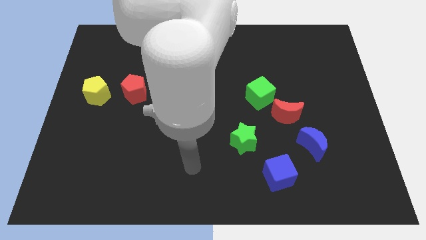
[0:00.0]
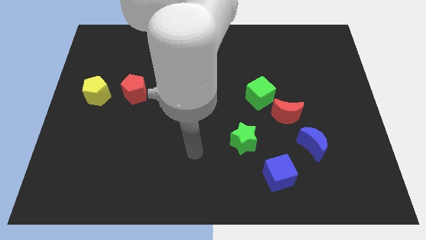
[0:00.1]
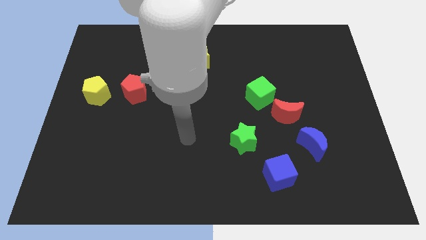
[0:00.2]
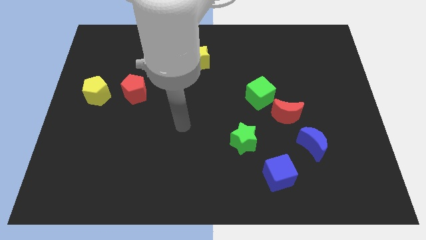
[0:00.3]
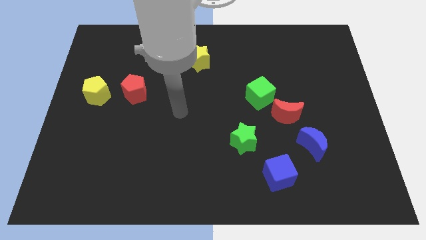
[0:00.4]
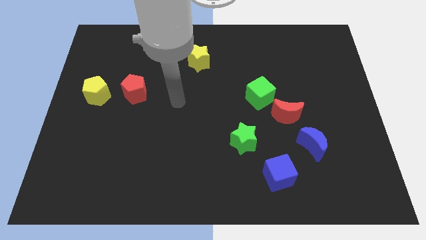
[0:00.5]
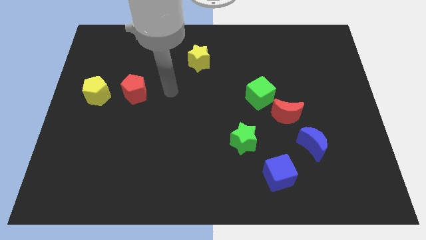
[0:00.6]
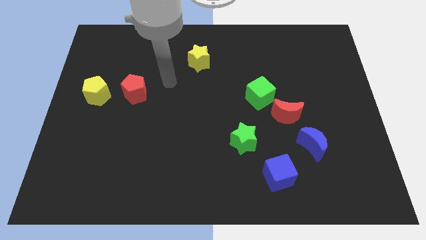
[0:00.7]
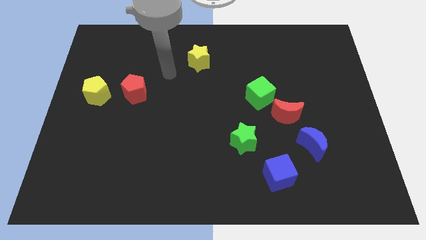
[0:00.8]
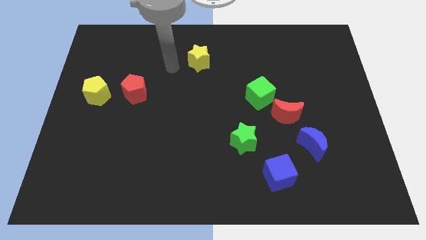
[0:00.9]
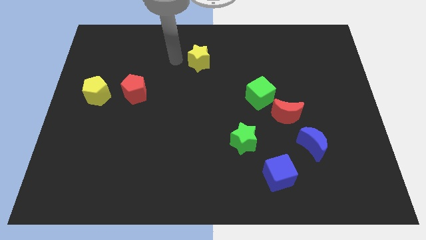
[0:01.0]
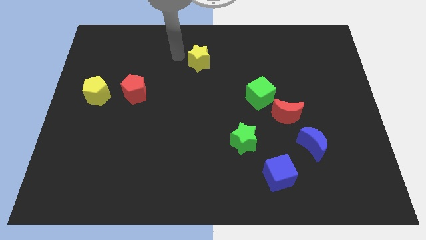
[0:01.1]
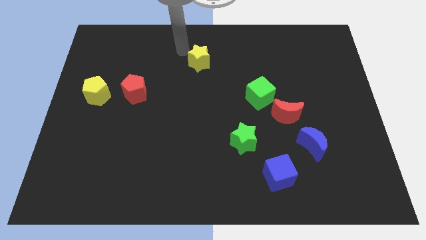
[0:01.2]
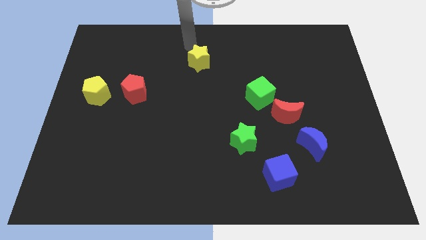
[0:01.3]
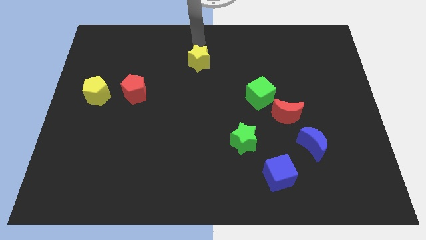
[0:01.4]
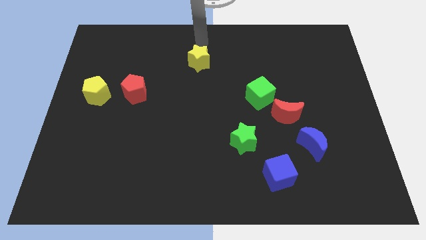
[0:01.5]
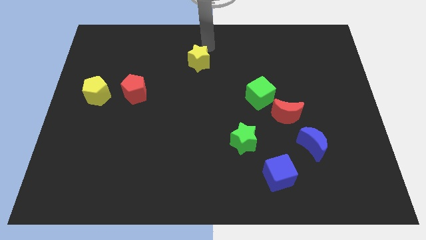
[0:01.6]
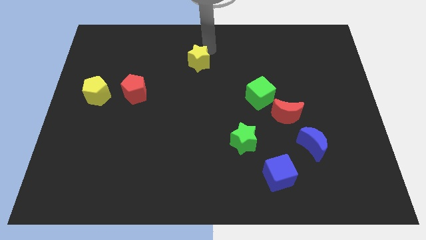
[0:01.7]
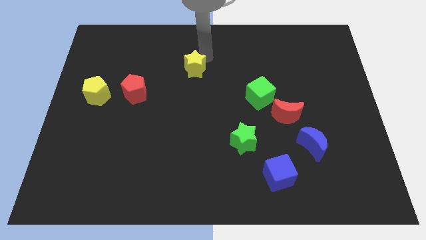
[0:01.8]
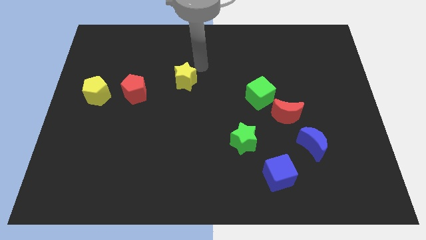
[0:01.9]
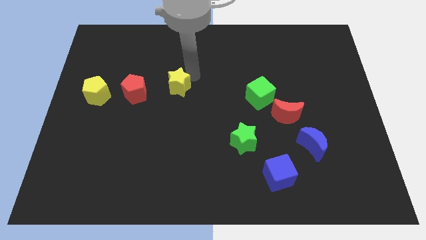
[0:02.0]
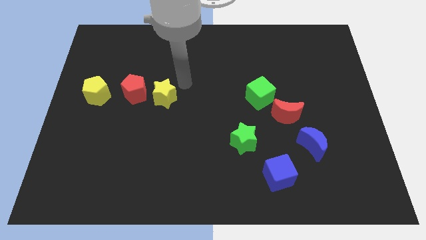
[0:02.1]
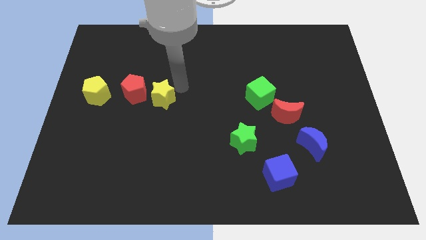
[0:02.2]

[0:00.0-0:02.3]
move the yellow star towards the bottom side

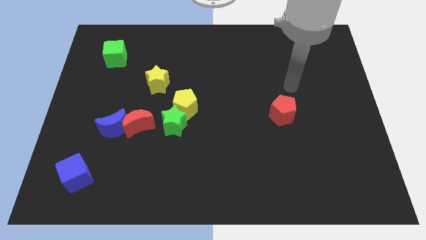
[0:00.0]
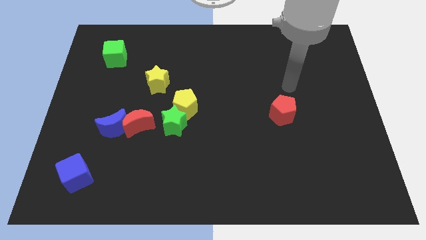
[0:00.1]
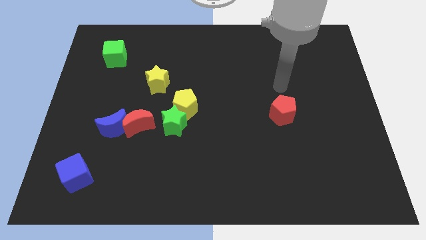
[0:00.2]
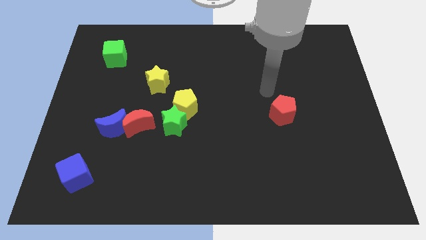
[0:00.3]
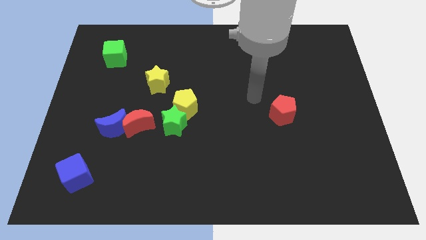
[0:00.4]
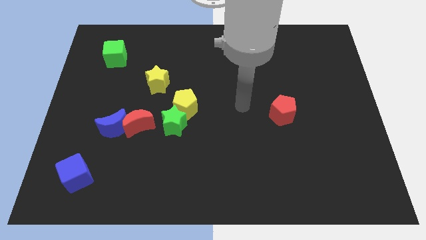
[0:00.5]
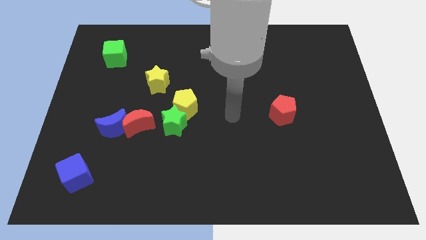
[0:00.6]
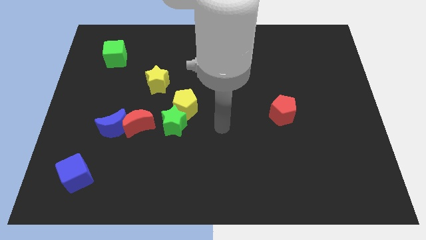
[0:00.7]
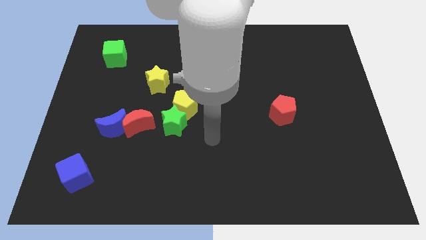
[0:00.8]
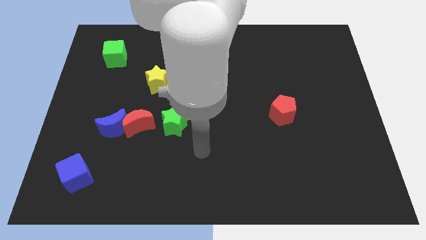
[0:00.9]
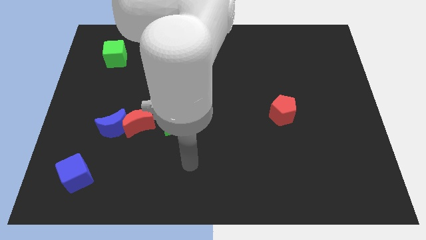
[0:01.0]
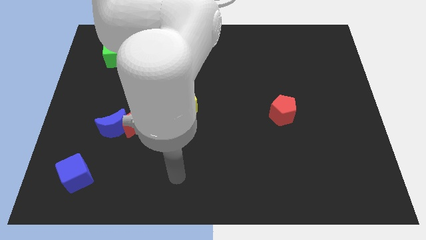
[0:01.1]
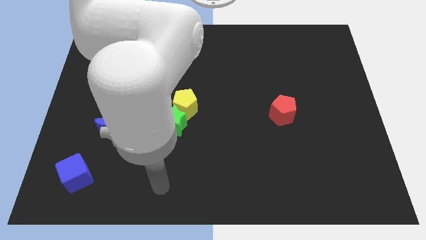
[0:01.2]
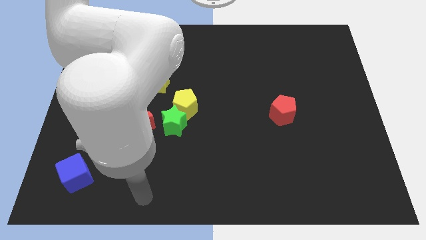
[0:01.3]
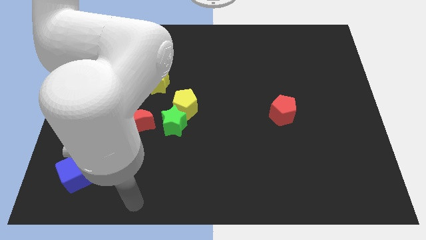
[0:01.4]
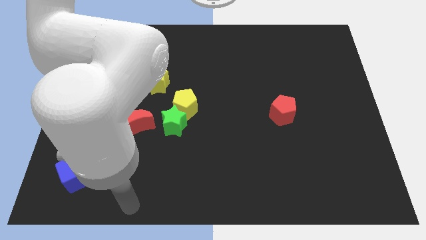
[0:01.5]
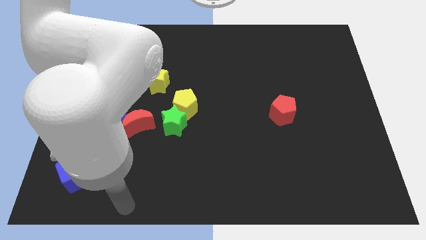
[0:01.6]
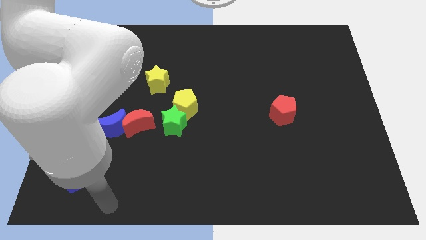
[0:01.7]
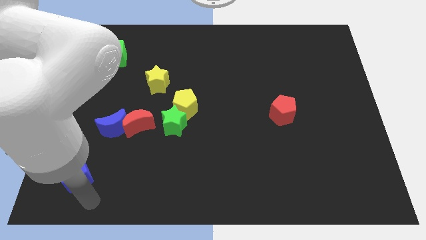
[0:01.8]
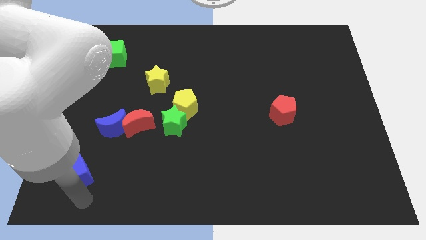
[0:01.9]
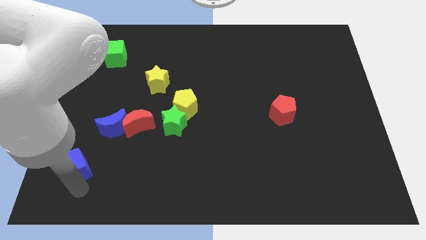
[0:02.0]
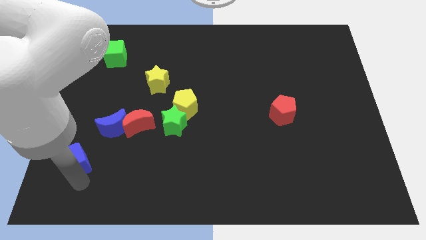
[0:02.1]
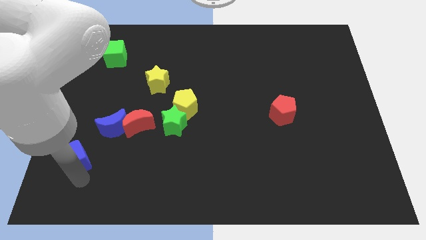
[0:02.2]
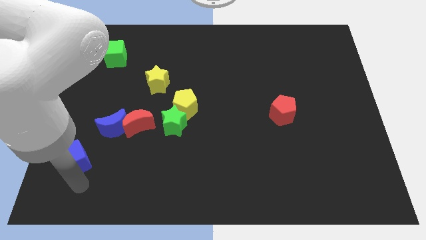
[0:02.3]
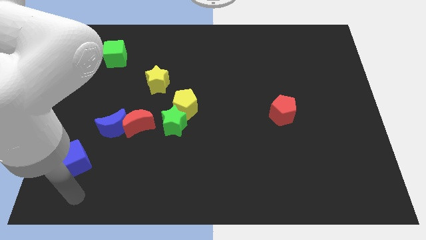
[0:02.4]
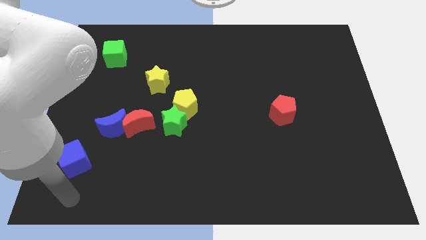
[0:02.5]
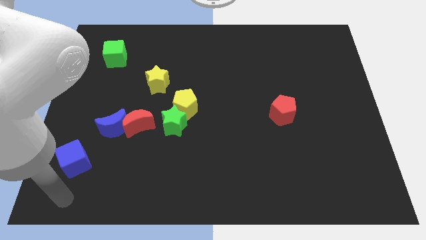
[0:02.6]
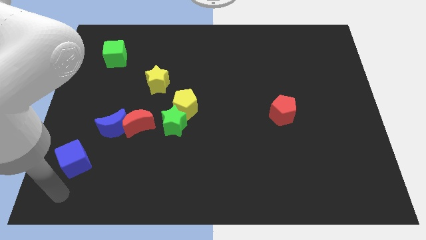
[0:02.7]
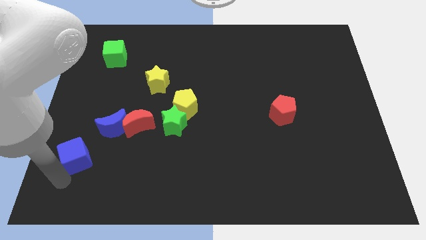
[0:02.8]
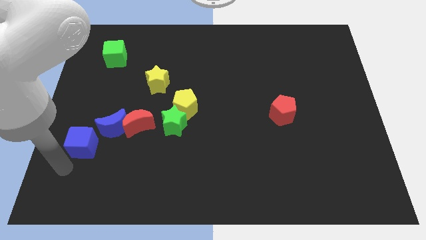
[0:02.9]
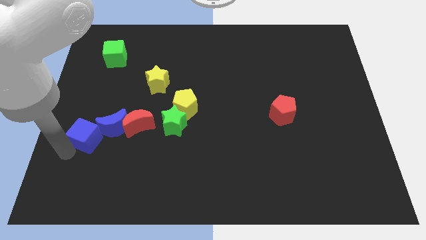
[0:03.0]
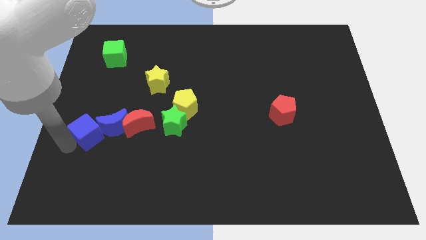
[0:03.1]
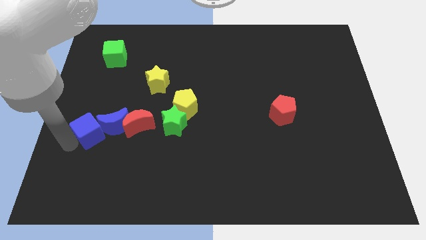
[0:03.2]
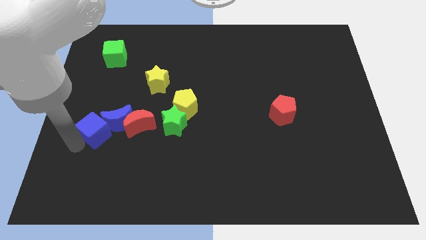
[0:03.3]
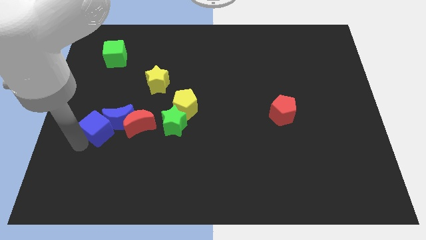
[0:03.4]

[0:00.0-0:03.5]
push the blue cube into the blue crescent from the left side

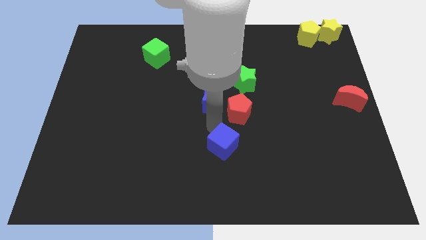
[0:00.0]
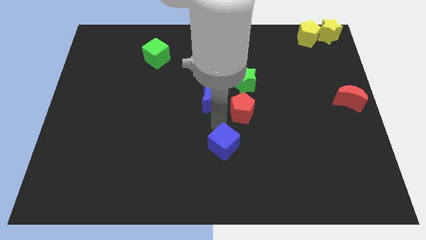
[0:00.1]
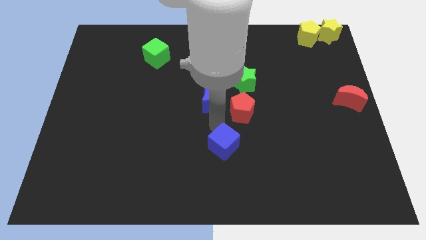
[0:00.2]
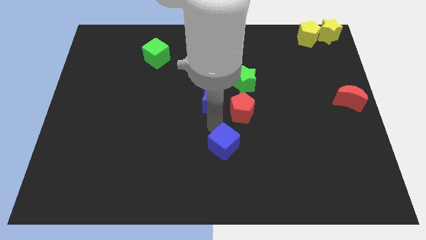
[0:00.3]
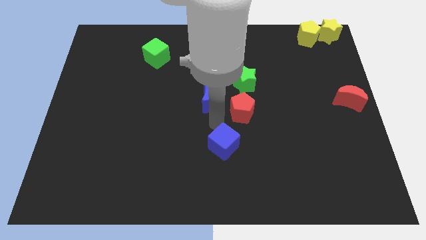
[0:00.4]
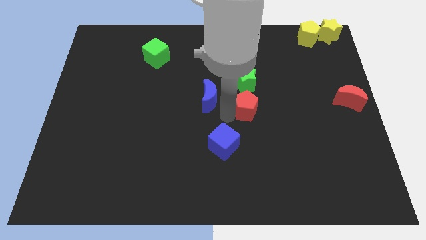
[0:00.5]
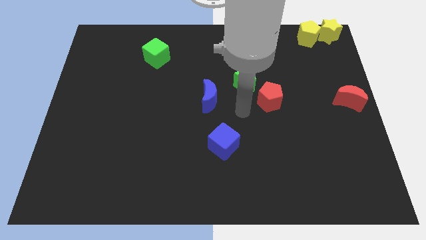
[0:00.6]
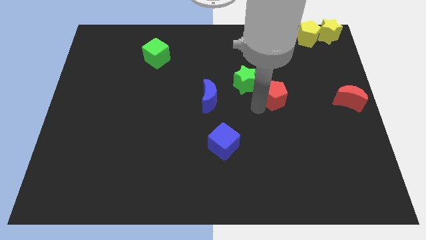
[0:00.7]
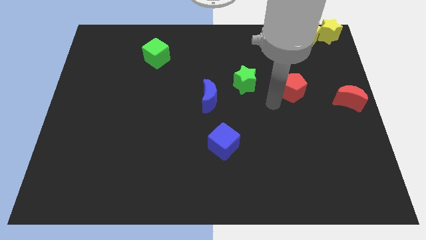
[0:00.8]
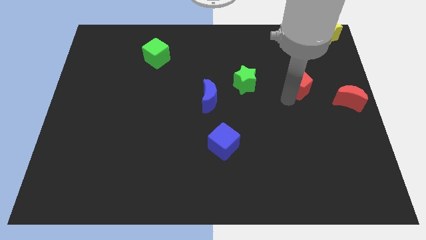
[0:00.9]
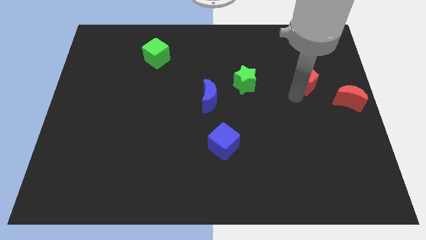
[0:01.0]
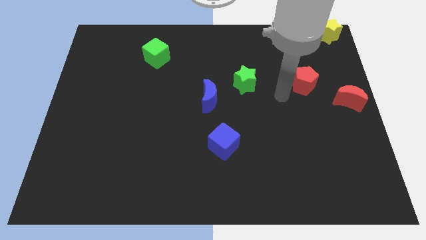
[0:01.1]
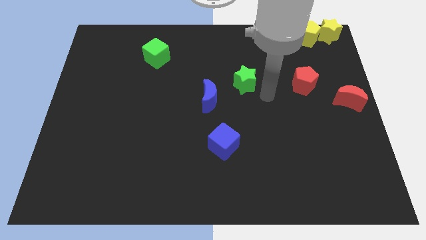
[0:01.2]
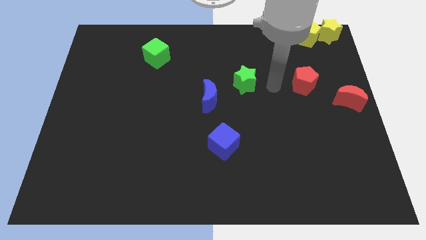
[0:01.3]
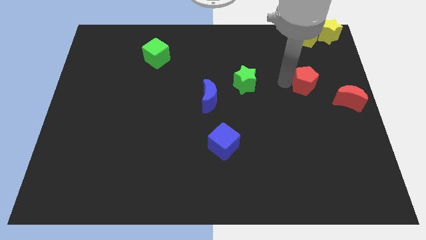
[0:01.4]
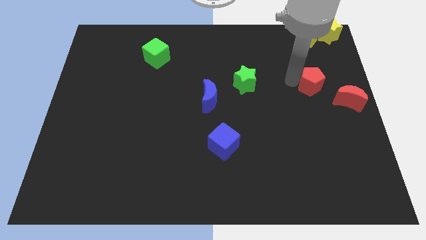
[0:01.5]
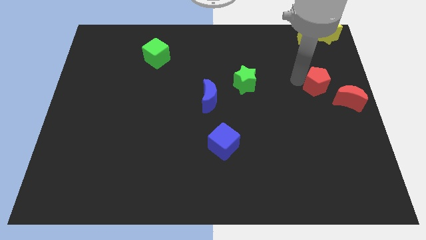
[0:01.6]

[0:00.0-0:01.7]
move the red pentagon towards the red crescent

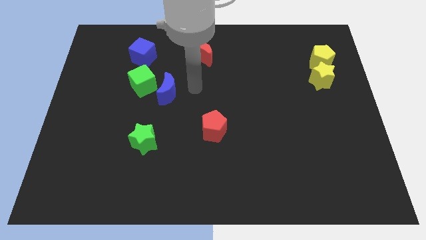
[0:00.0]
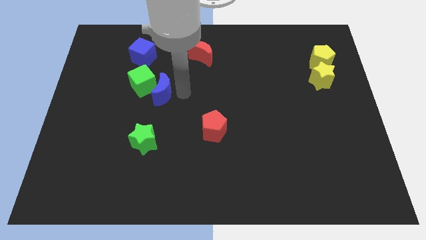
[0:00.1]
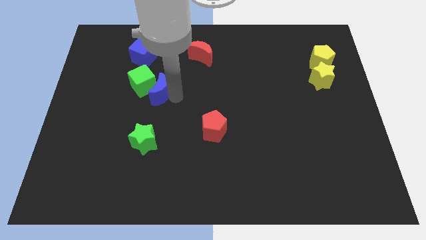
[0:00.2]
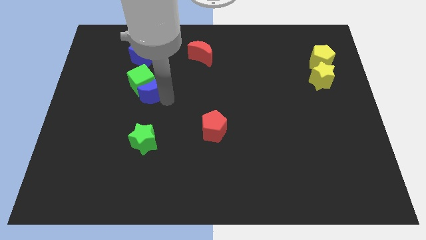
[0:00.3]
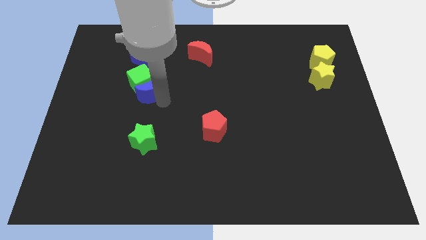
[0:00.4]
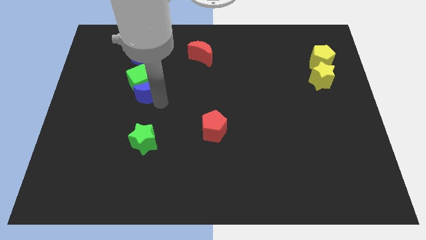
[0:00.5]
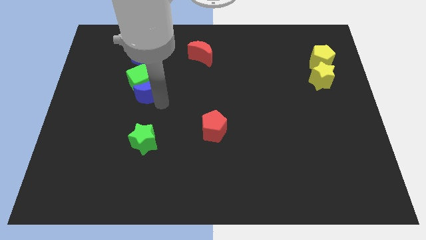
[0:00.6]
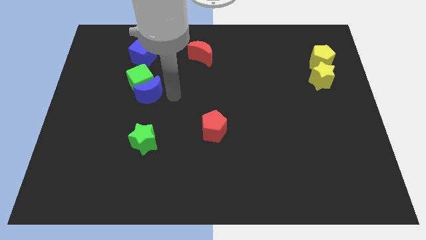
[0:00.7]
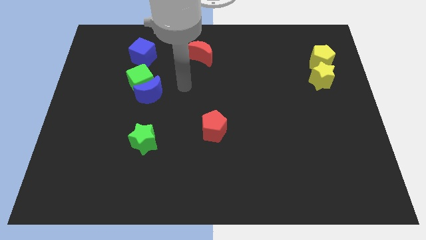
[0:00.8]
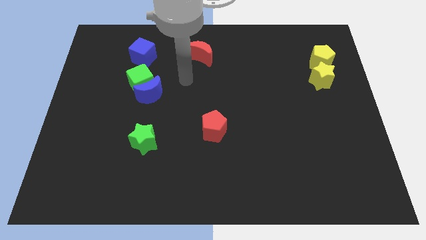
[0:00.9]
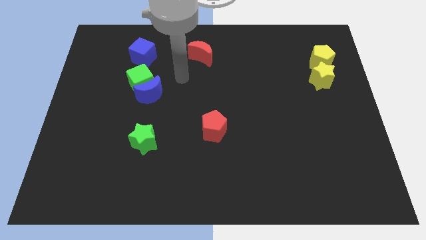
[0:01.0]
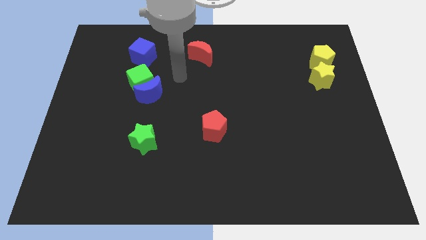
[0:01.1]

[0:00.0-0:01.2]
move the blue crescent into the green cube

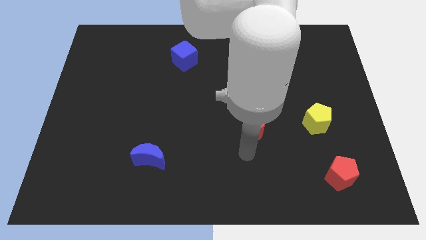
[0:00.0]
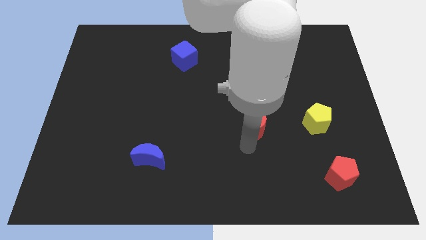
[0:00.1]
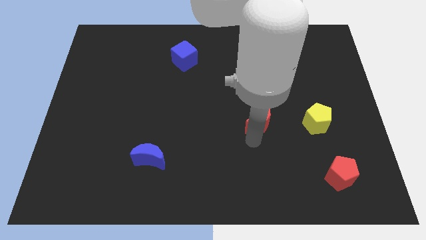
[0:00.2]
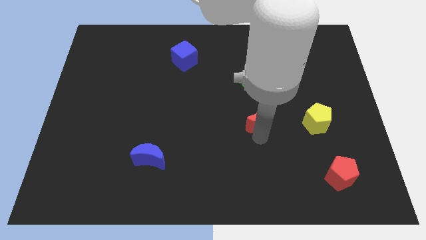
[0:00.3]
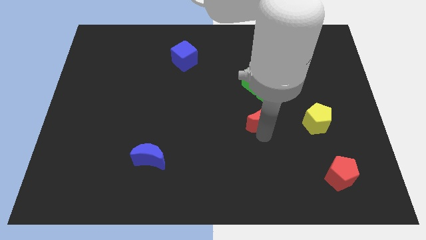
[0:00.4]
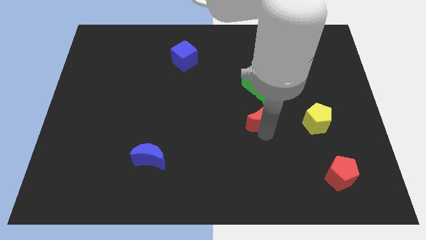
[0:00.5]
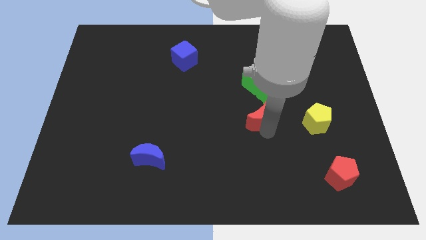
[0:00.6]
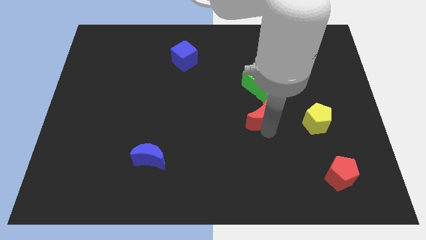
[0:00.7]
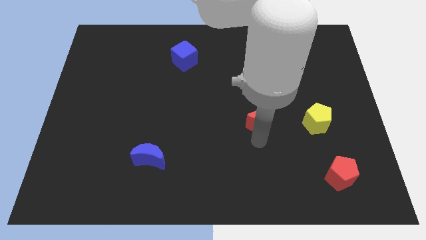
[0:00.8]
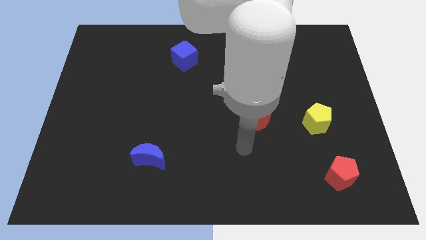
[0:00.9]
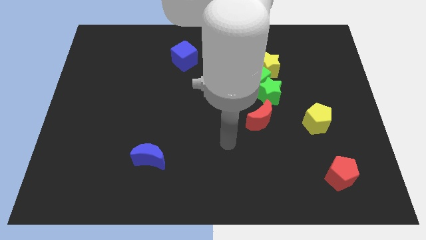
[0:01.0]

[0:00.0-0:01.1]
push red moon on the bottom of green star
